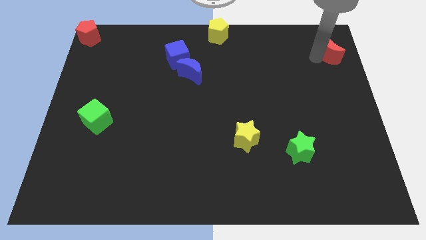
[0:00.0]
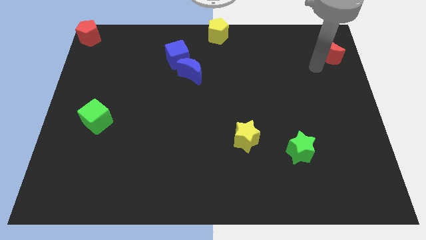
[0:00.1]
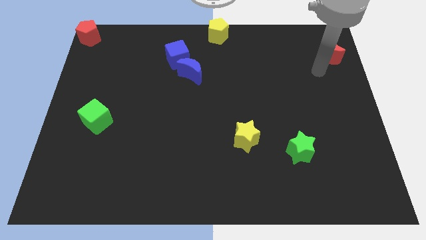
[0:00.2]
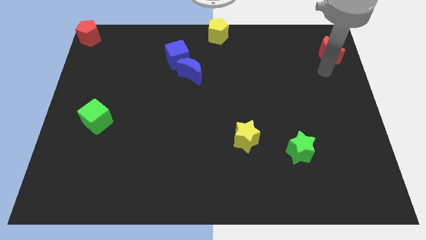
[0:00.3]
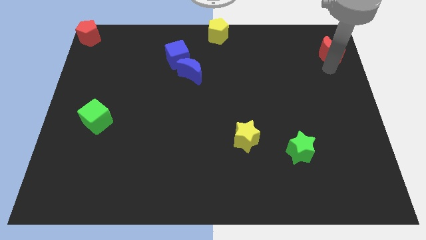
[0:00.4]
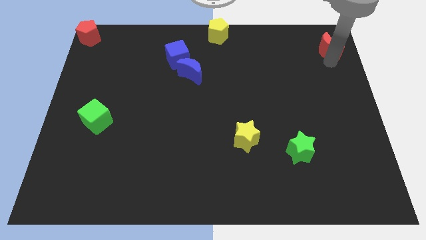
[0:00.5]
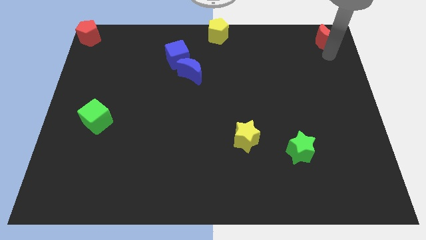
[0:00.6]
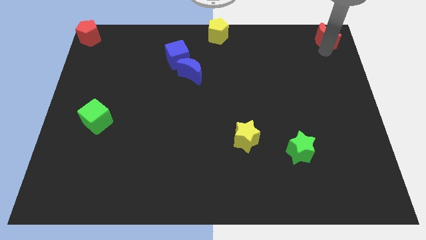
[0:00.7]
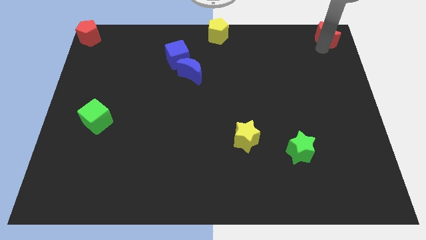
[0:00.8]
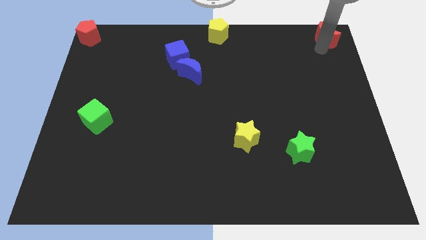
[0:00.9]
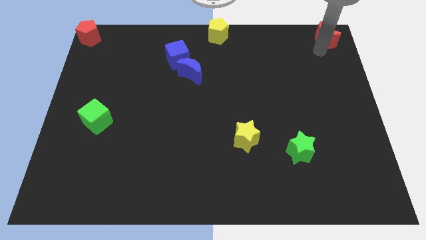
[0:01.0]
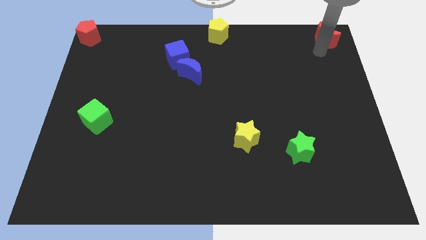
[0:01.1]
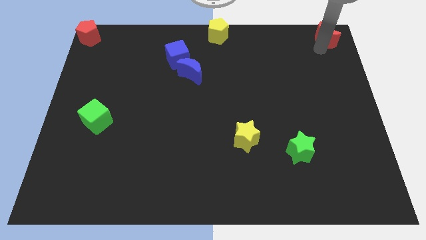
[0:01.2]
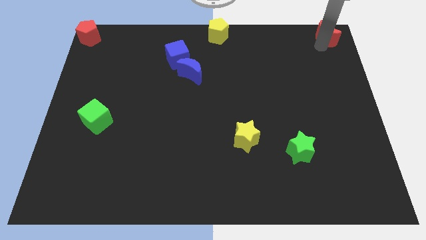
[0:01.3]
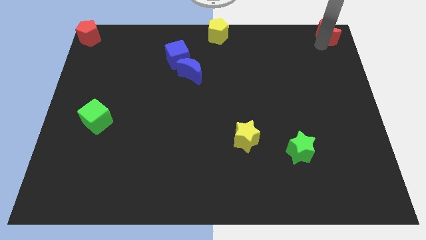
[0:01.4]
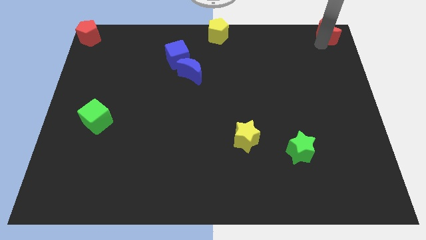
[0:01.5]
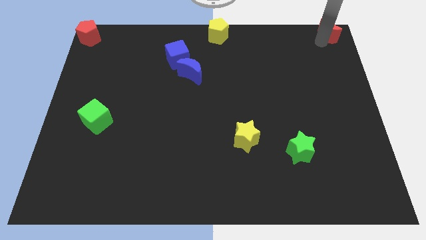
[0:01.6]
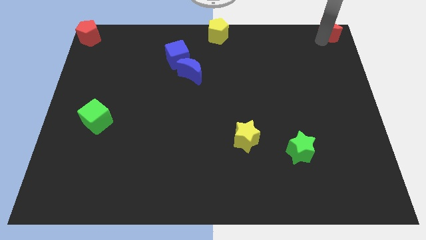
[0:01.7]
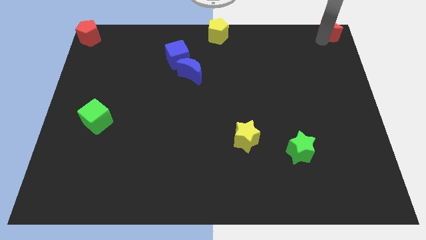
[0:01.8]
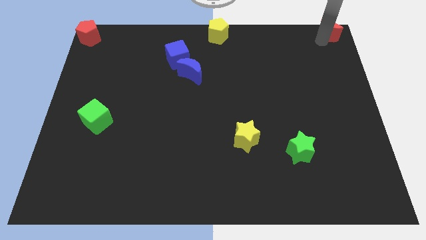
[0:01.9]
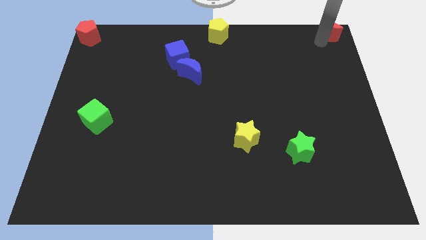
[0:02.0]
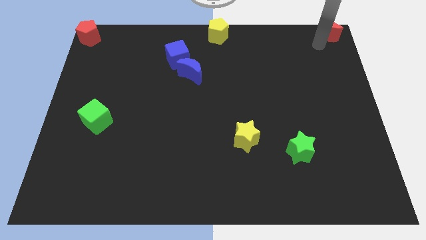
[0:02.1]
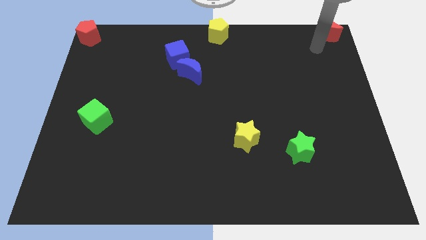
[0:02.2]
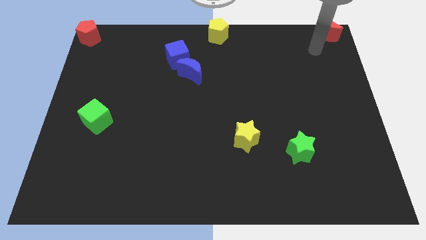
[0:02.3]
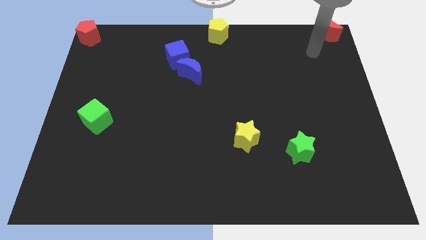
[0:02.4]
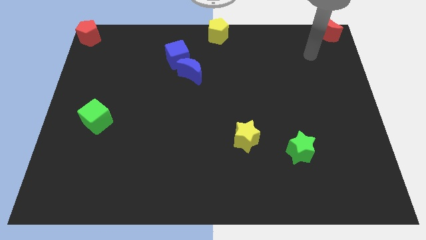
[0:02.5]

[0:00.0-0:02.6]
push the red crescent to the top right corner of the board

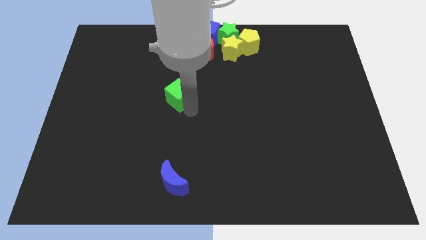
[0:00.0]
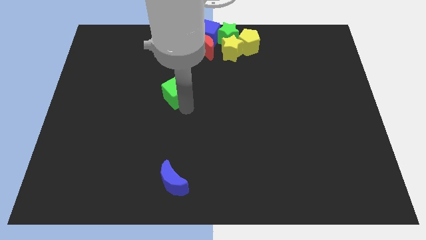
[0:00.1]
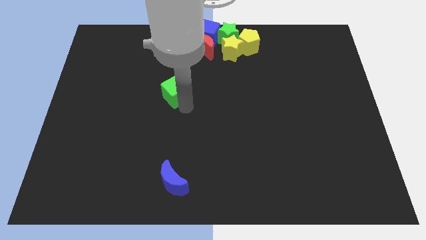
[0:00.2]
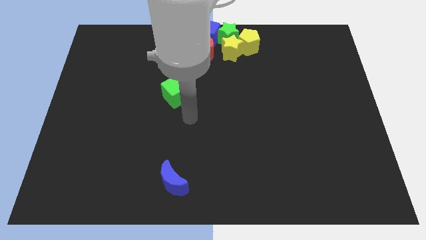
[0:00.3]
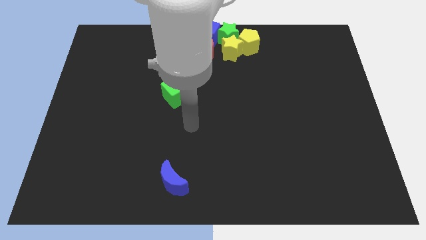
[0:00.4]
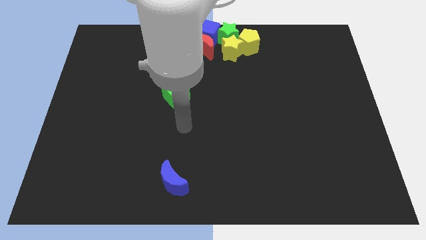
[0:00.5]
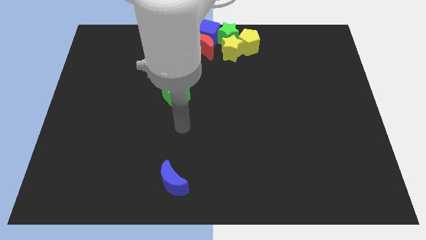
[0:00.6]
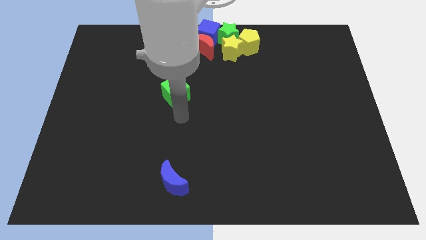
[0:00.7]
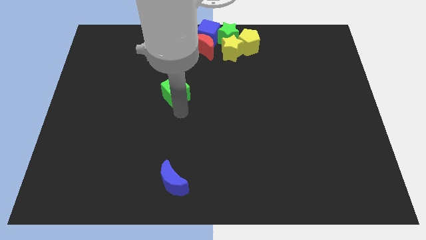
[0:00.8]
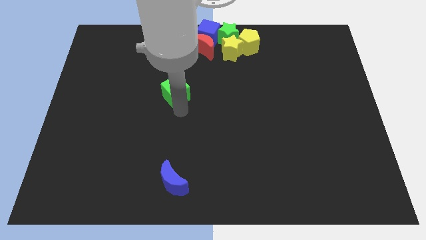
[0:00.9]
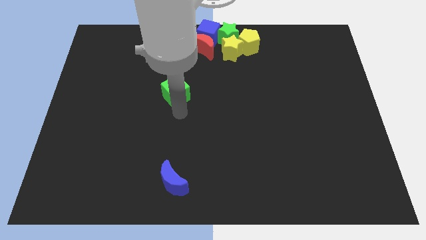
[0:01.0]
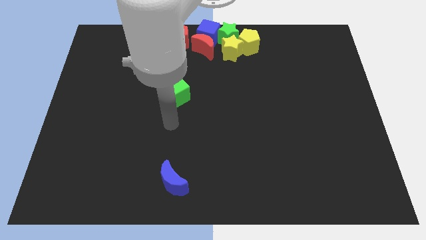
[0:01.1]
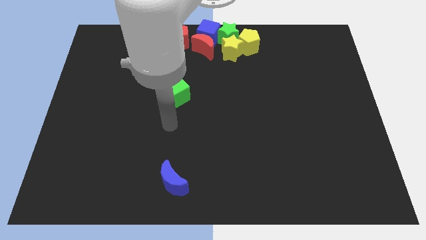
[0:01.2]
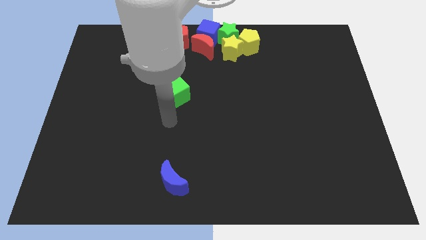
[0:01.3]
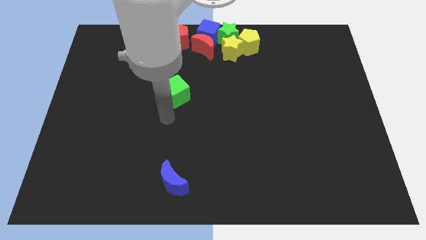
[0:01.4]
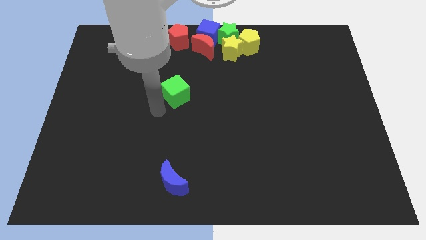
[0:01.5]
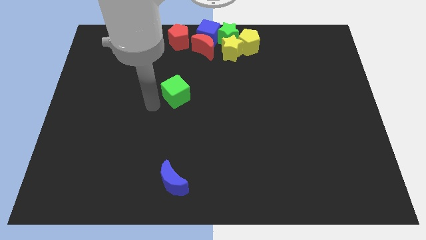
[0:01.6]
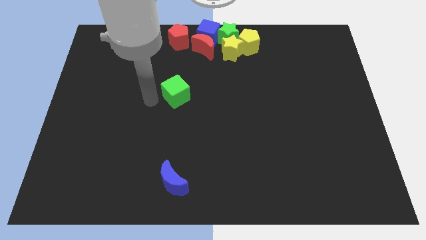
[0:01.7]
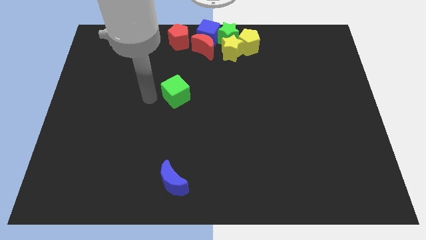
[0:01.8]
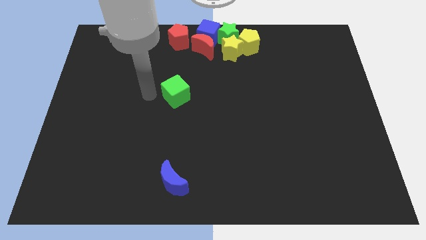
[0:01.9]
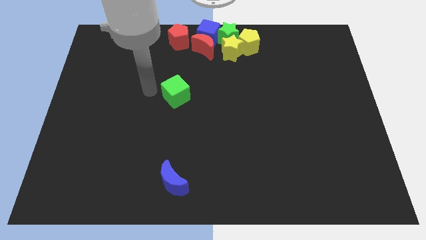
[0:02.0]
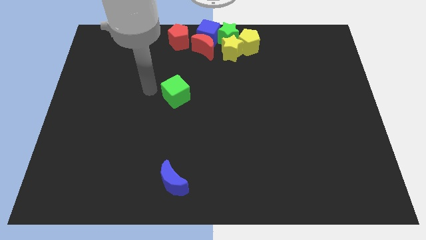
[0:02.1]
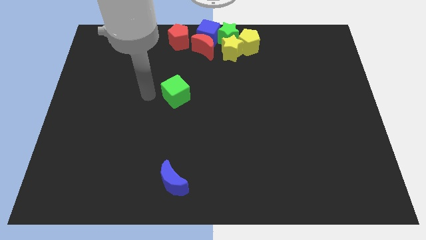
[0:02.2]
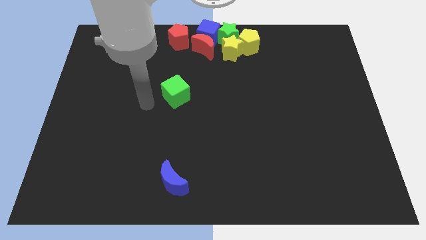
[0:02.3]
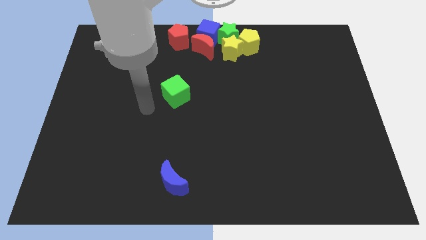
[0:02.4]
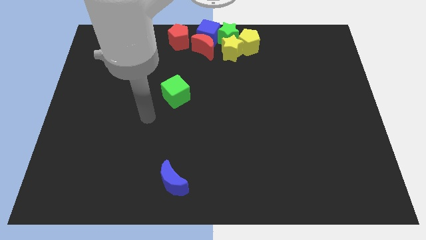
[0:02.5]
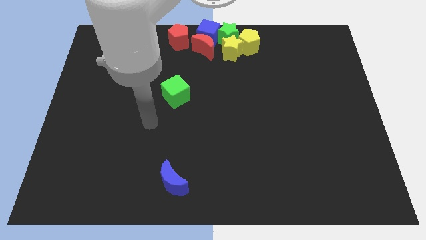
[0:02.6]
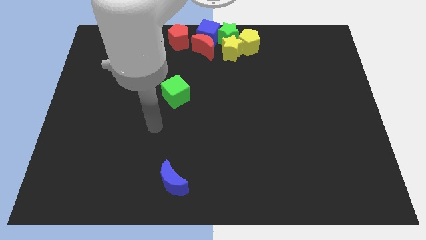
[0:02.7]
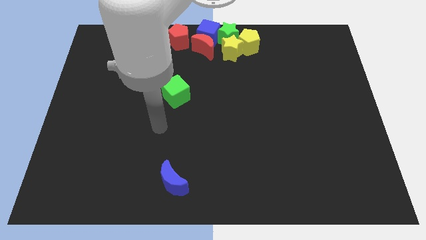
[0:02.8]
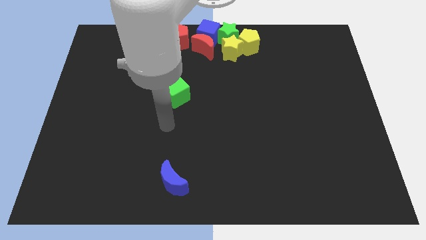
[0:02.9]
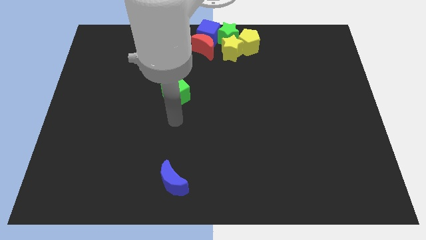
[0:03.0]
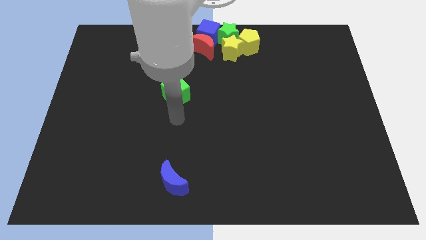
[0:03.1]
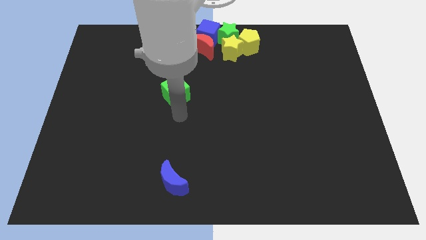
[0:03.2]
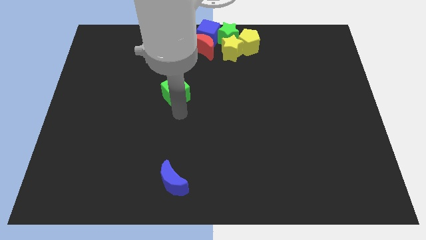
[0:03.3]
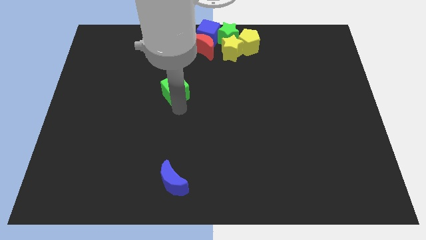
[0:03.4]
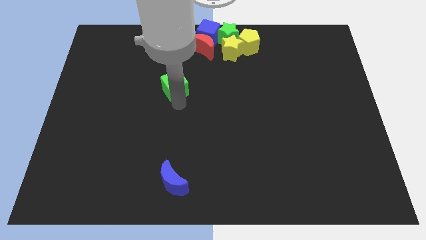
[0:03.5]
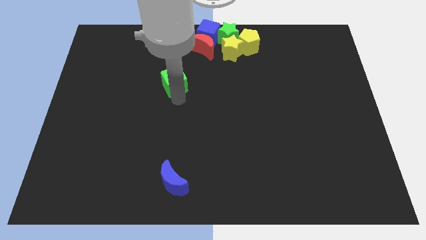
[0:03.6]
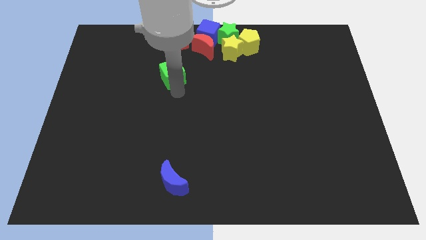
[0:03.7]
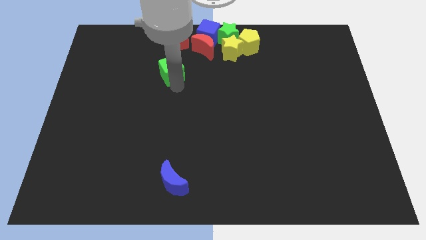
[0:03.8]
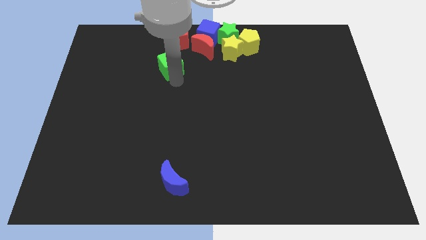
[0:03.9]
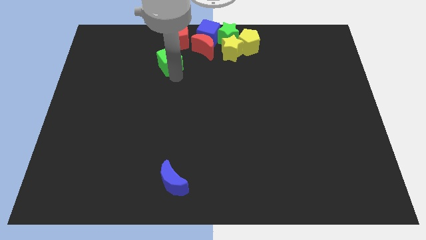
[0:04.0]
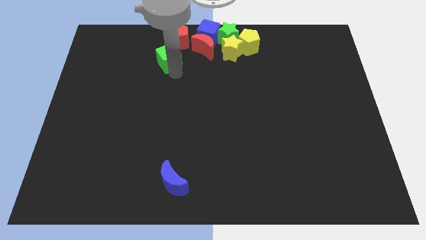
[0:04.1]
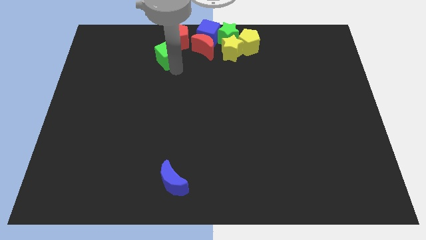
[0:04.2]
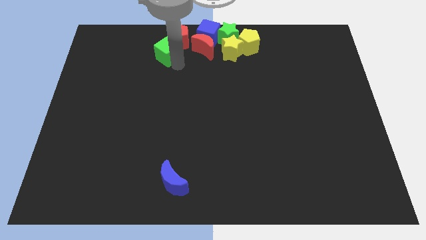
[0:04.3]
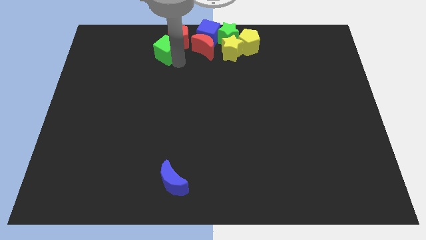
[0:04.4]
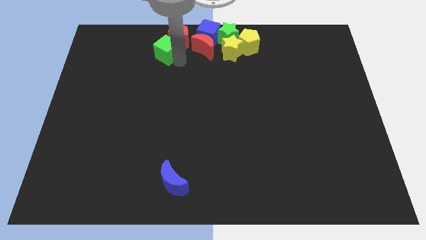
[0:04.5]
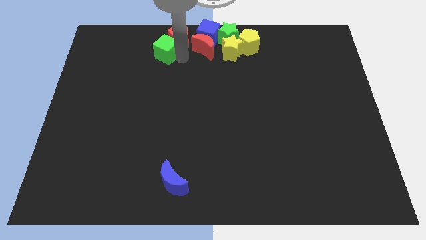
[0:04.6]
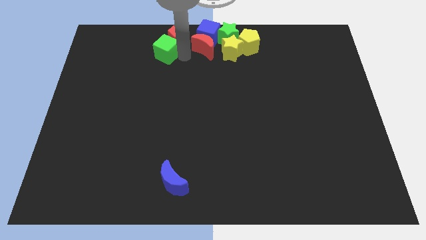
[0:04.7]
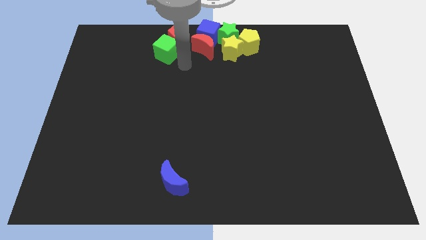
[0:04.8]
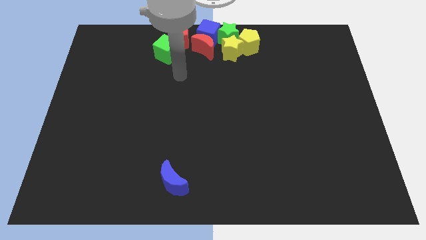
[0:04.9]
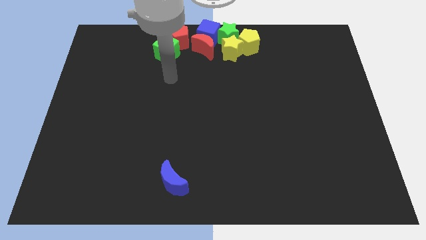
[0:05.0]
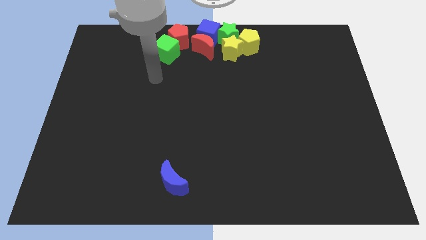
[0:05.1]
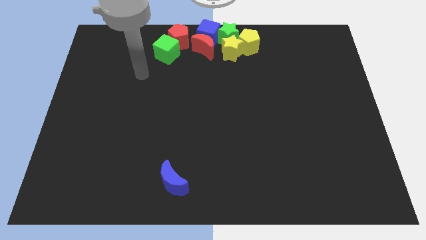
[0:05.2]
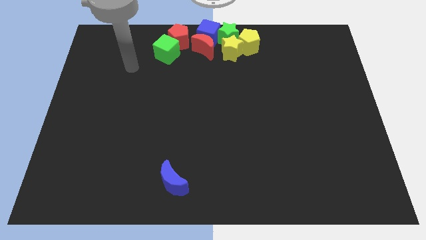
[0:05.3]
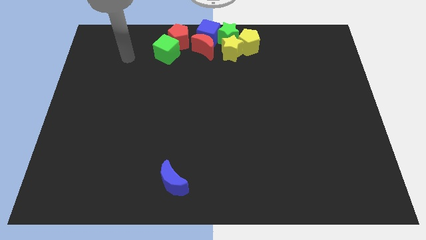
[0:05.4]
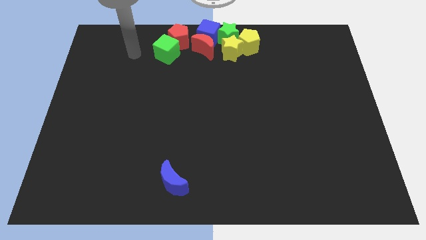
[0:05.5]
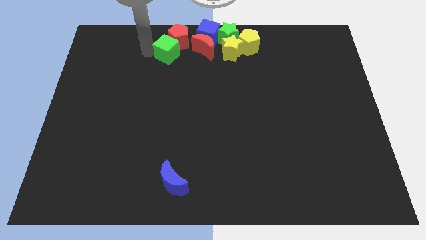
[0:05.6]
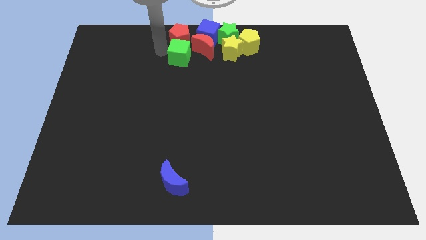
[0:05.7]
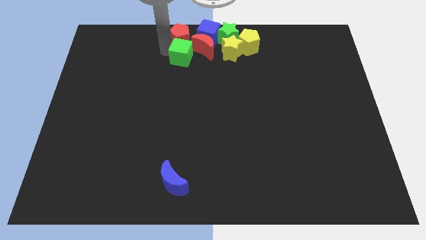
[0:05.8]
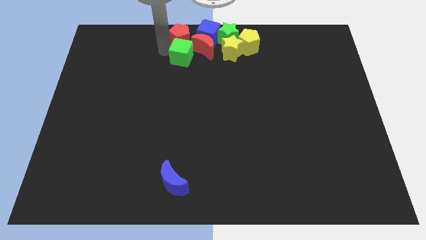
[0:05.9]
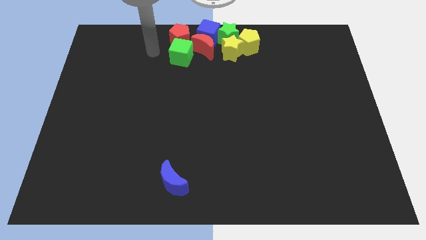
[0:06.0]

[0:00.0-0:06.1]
push the green cube into the red crescent

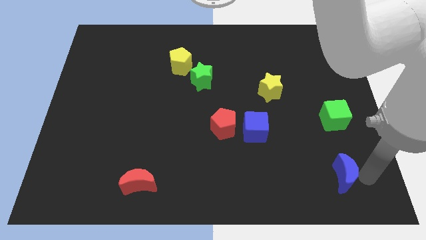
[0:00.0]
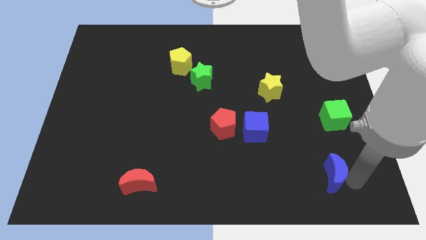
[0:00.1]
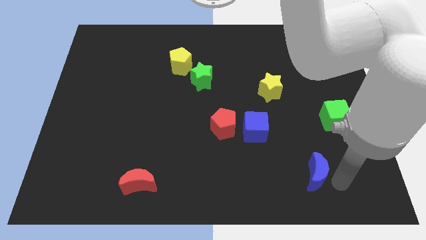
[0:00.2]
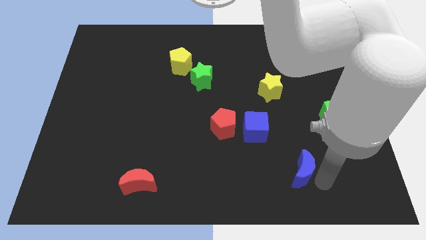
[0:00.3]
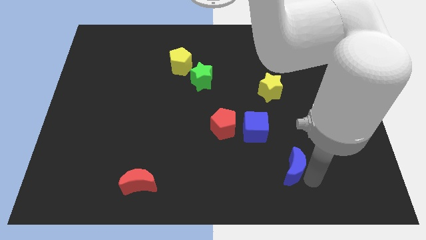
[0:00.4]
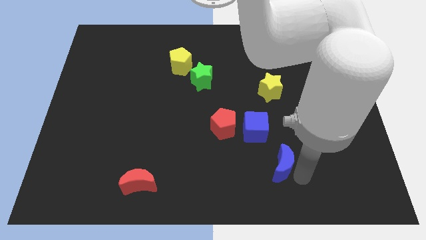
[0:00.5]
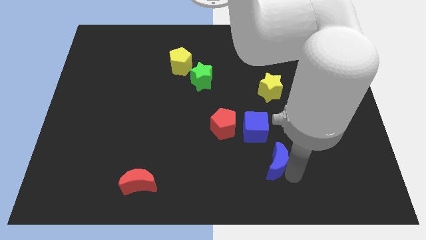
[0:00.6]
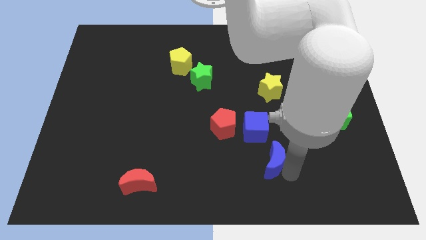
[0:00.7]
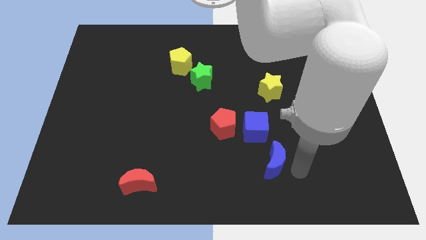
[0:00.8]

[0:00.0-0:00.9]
move the blue crescent close to the blue cube
